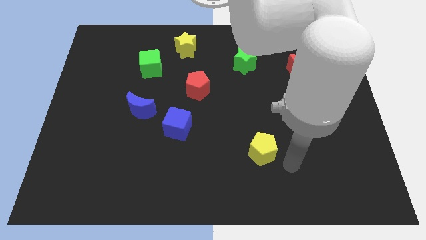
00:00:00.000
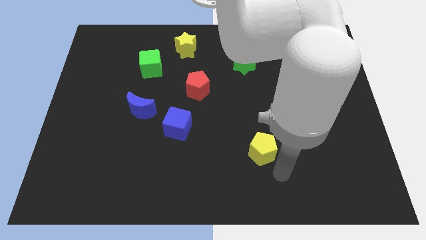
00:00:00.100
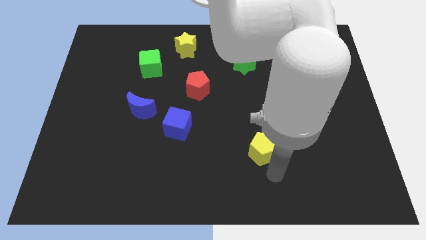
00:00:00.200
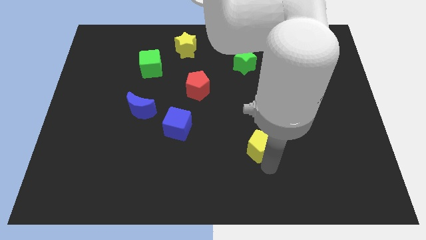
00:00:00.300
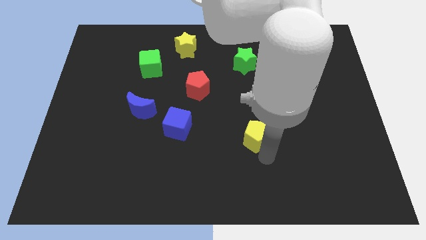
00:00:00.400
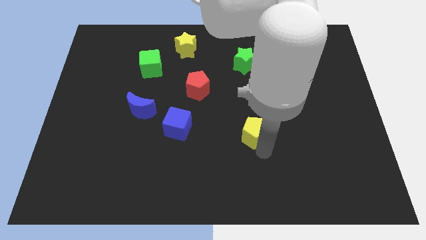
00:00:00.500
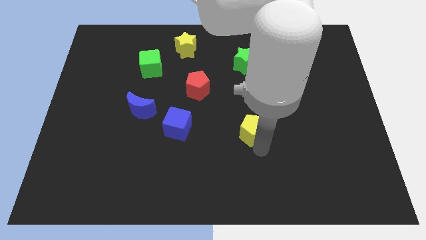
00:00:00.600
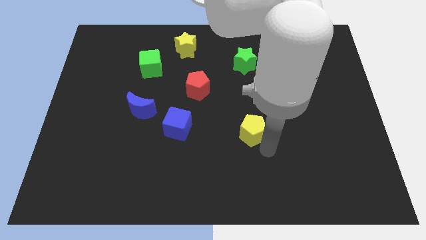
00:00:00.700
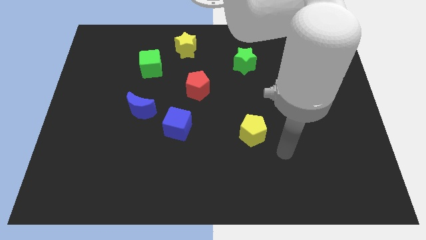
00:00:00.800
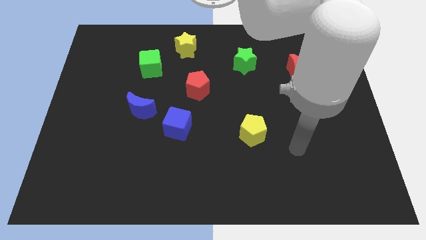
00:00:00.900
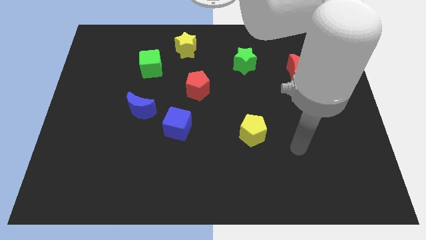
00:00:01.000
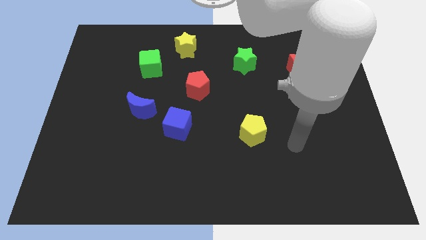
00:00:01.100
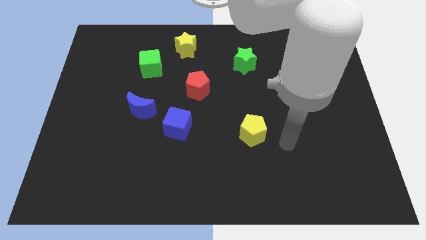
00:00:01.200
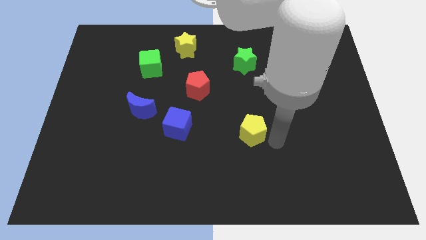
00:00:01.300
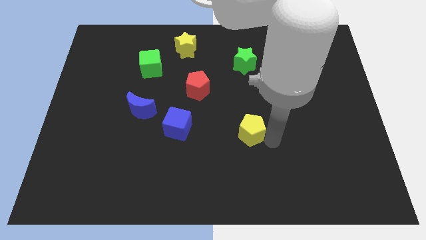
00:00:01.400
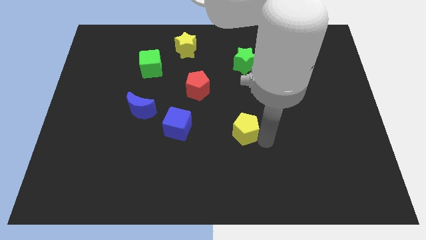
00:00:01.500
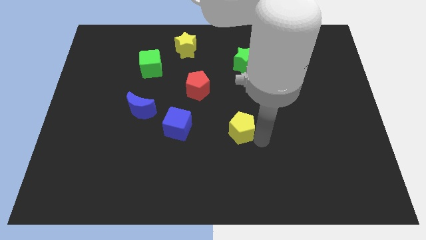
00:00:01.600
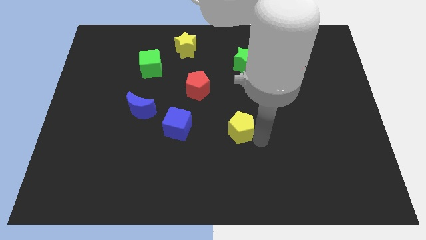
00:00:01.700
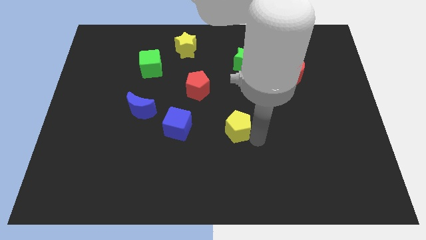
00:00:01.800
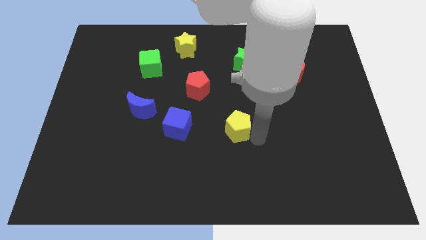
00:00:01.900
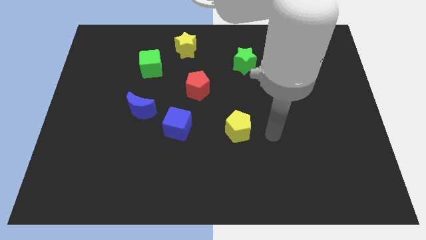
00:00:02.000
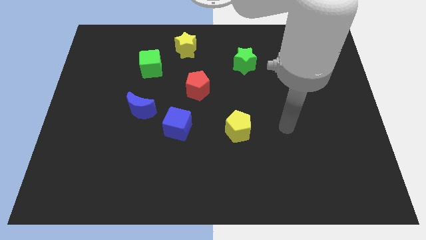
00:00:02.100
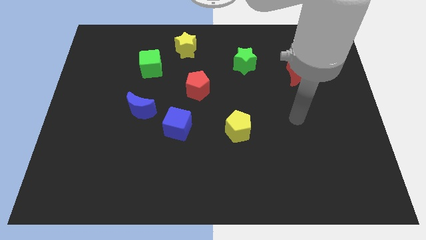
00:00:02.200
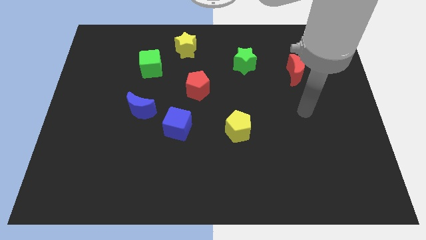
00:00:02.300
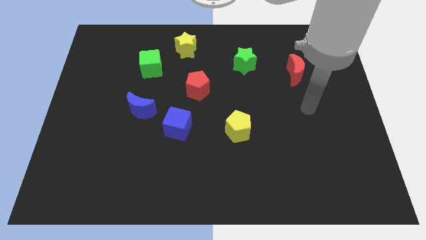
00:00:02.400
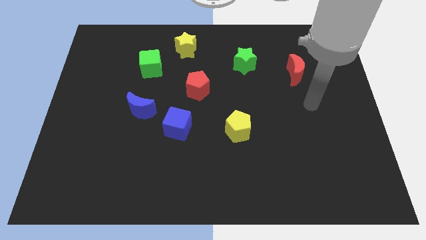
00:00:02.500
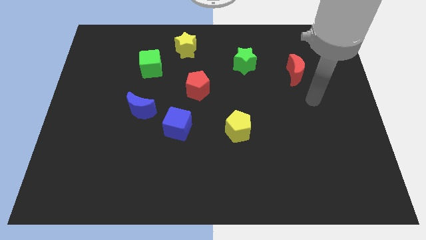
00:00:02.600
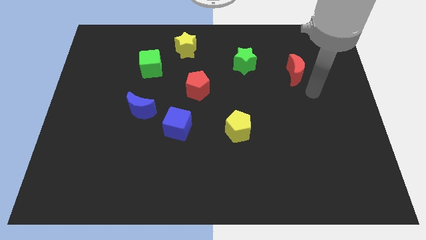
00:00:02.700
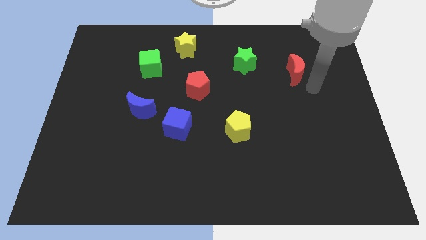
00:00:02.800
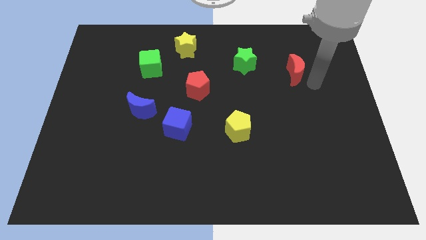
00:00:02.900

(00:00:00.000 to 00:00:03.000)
place yellow pentagon right of the blue block

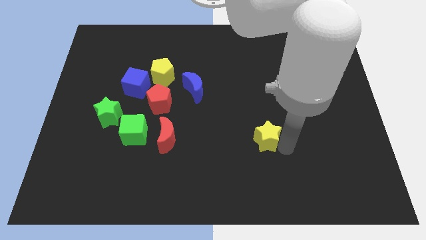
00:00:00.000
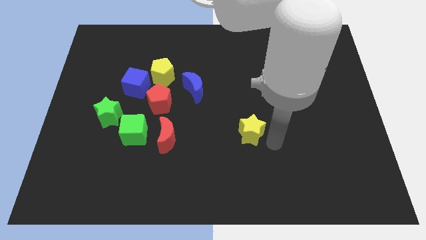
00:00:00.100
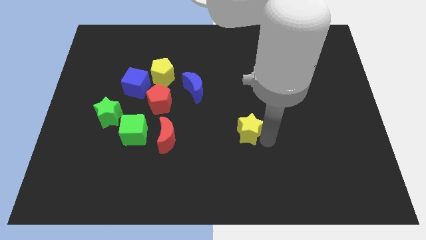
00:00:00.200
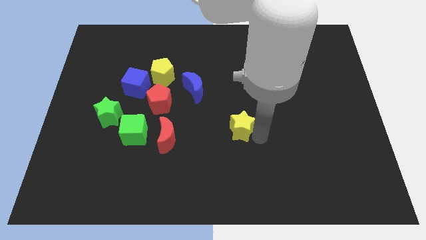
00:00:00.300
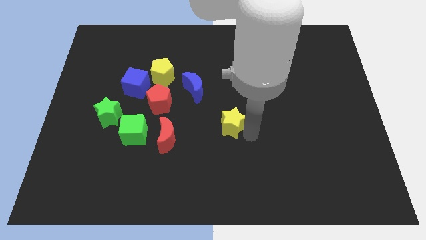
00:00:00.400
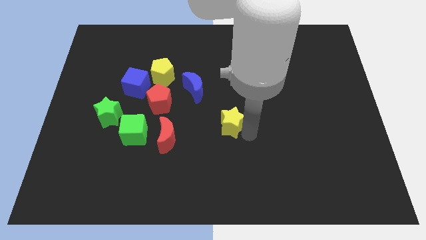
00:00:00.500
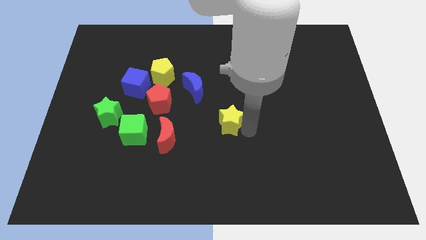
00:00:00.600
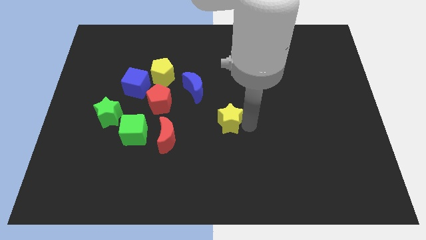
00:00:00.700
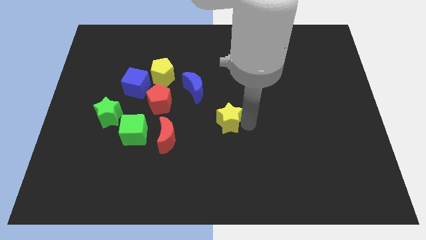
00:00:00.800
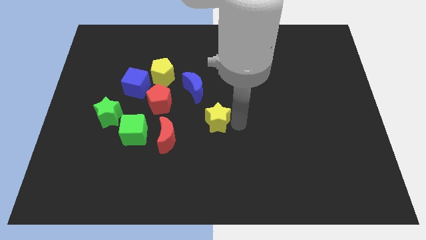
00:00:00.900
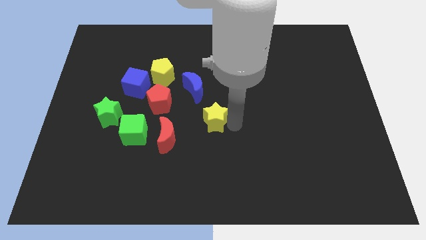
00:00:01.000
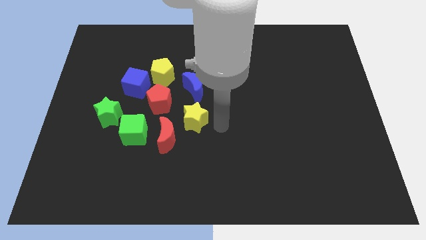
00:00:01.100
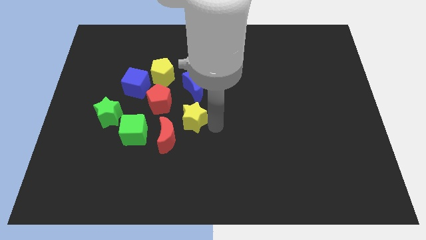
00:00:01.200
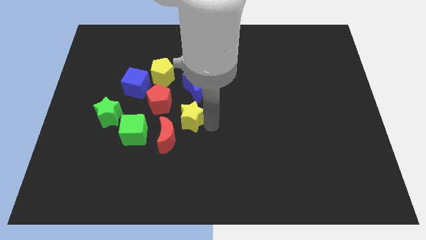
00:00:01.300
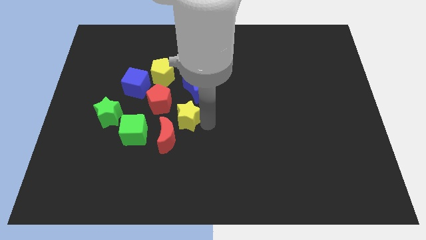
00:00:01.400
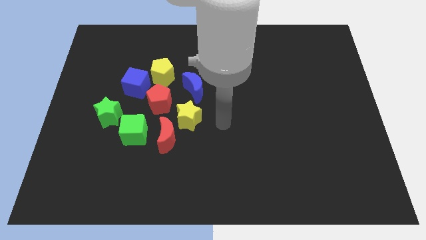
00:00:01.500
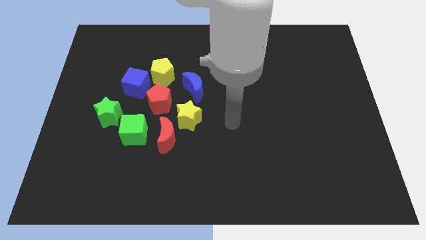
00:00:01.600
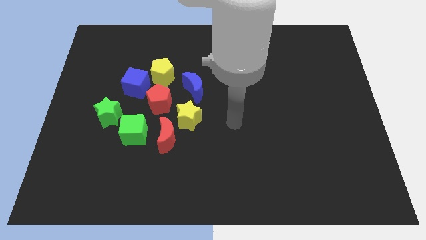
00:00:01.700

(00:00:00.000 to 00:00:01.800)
push yellow star towards the blue crescent

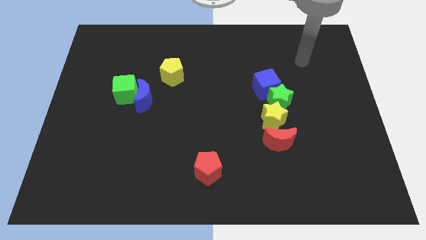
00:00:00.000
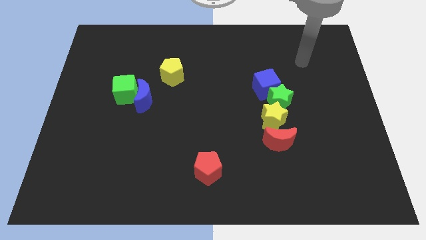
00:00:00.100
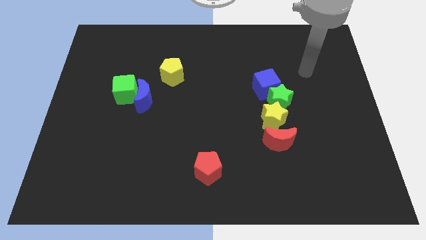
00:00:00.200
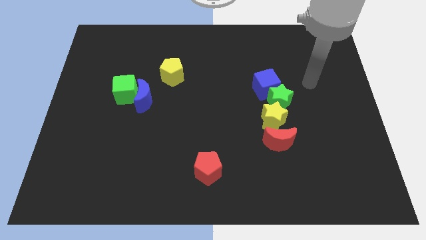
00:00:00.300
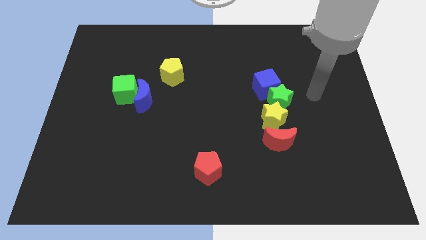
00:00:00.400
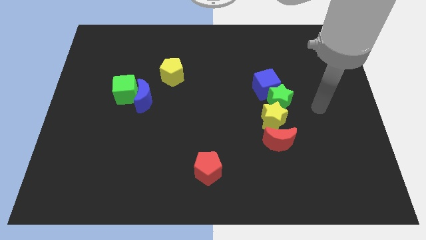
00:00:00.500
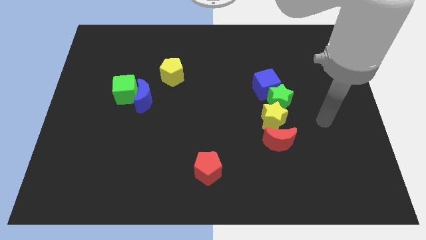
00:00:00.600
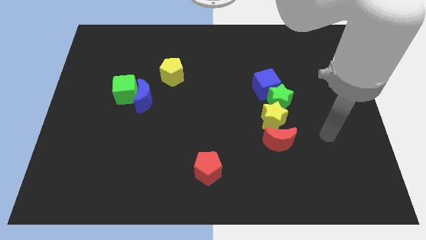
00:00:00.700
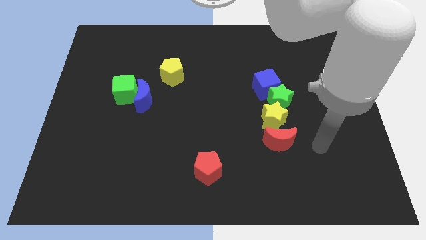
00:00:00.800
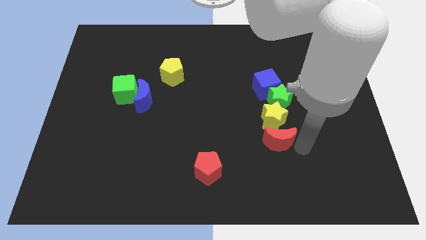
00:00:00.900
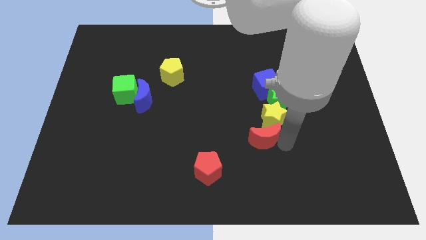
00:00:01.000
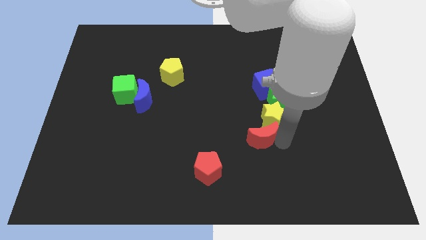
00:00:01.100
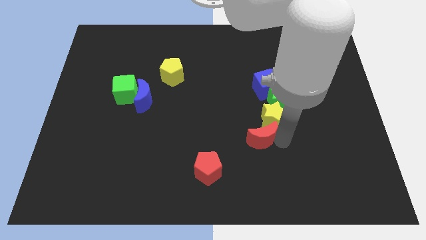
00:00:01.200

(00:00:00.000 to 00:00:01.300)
move the red moon slightly to the left

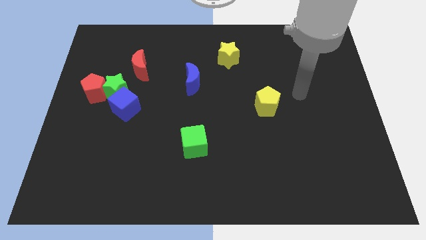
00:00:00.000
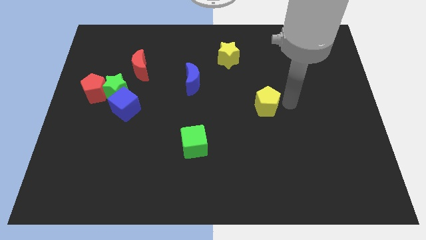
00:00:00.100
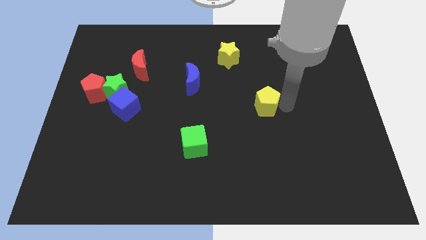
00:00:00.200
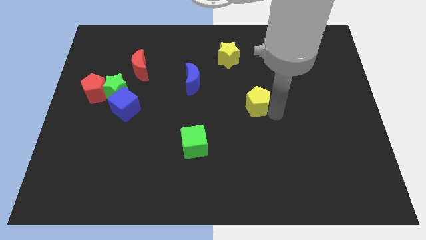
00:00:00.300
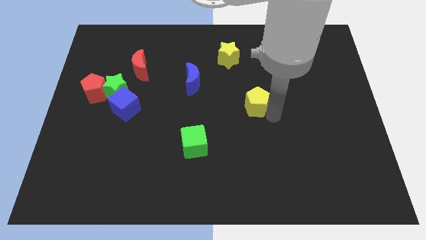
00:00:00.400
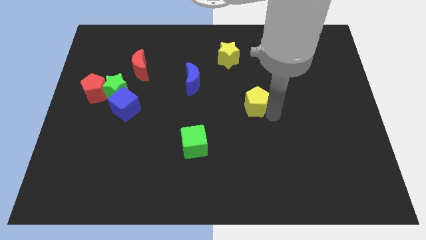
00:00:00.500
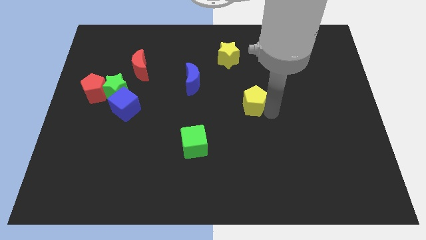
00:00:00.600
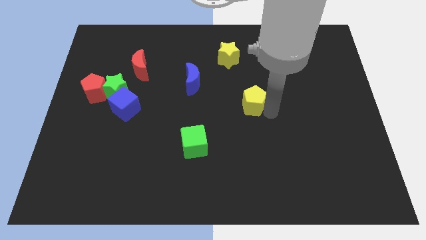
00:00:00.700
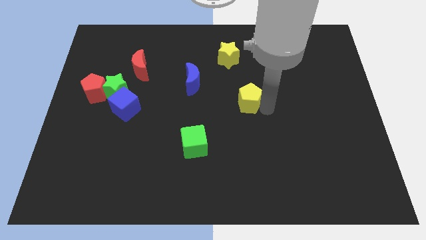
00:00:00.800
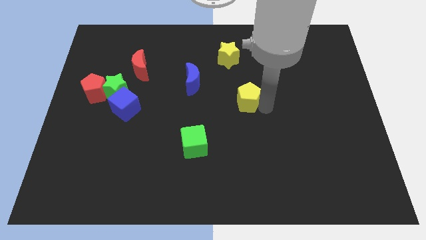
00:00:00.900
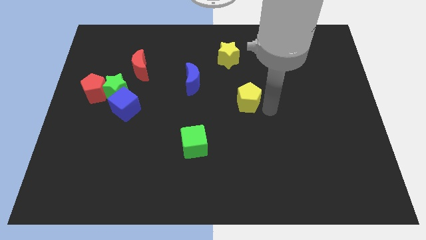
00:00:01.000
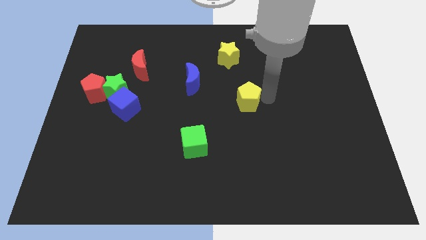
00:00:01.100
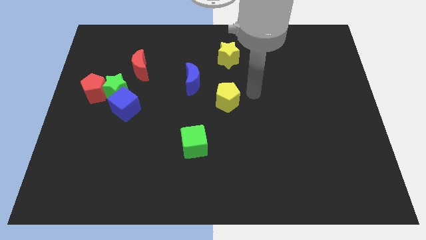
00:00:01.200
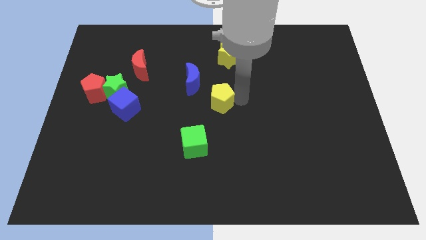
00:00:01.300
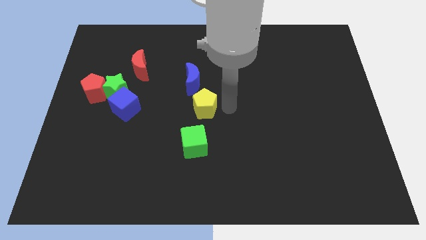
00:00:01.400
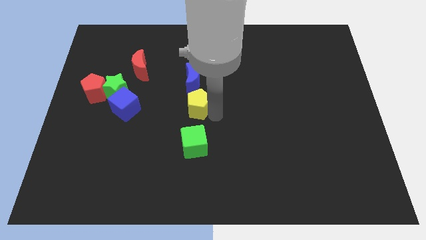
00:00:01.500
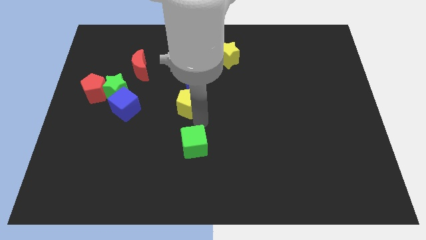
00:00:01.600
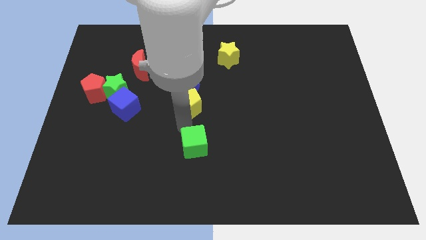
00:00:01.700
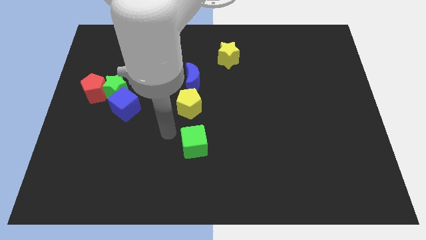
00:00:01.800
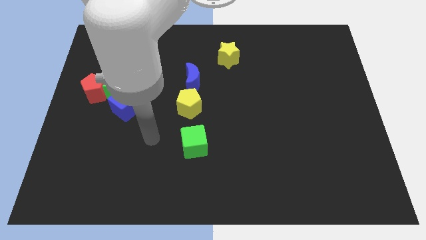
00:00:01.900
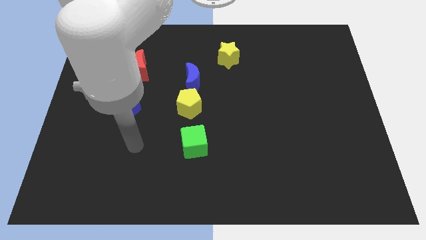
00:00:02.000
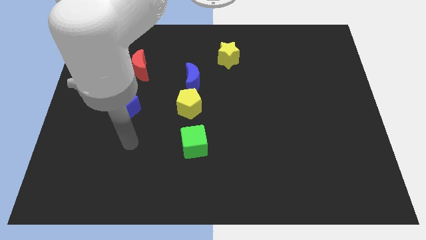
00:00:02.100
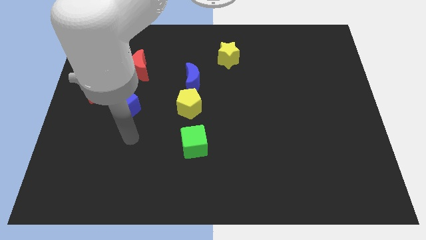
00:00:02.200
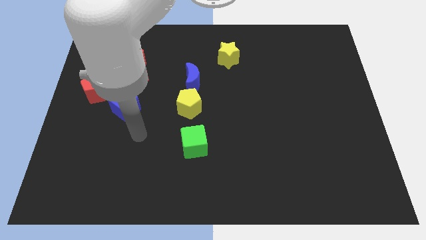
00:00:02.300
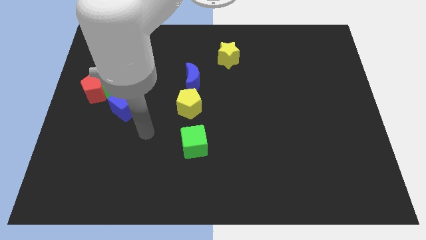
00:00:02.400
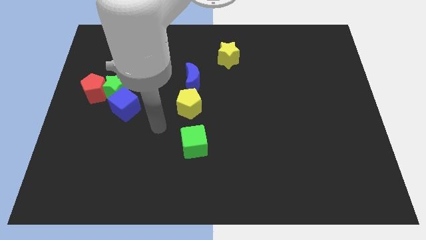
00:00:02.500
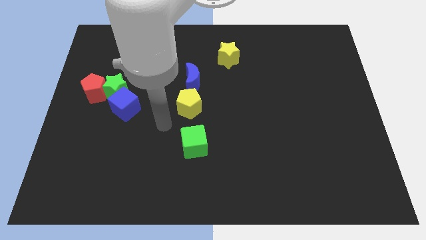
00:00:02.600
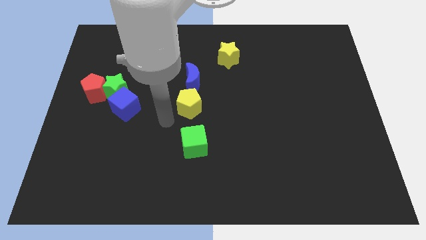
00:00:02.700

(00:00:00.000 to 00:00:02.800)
place the yellow pentagon below the blue crescent
